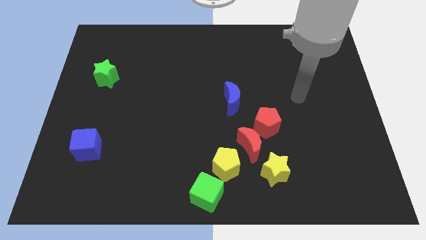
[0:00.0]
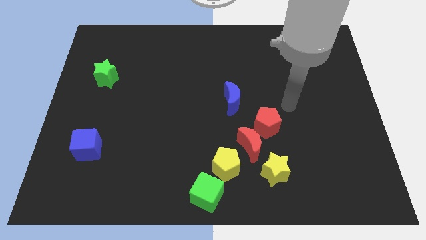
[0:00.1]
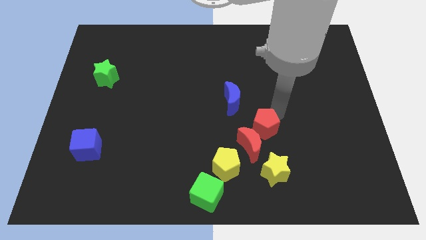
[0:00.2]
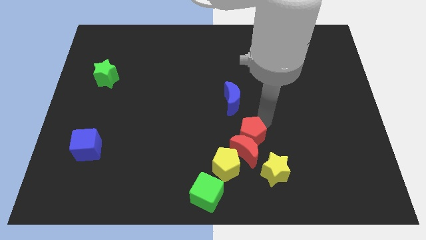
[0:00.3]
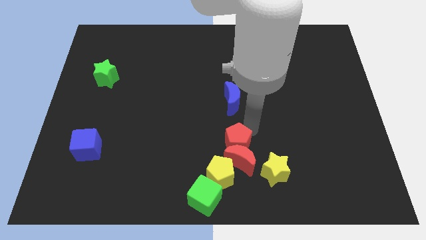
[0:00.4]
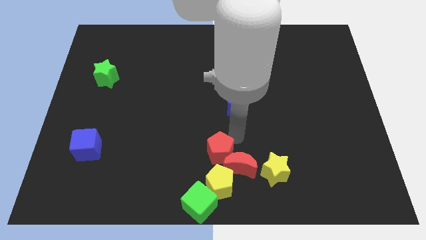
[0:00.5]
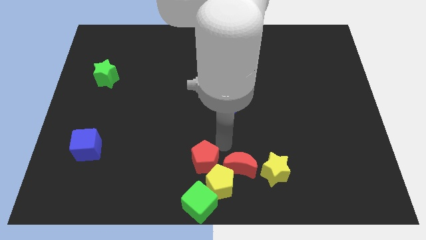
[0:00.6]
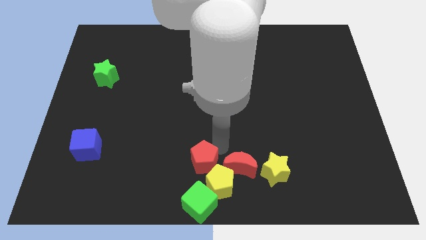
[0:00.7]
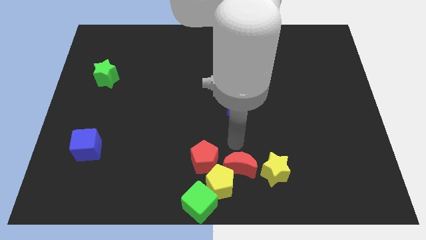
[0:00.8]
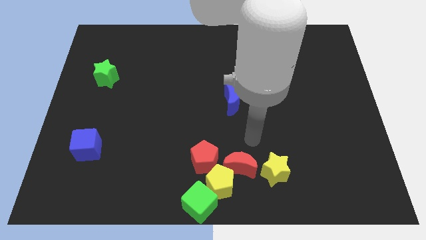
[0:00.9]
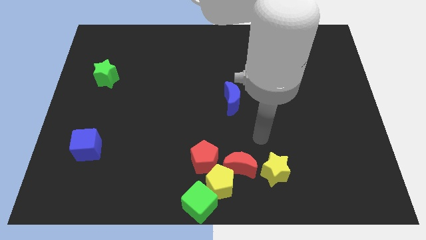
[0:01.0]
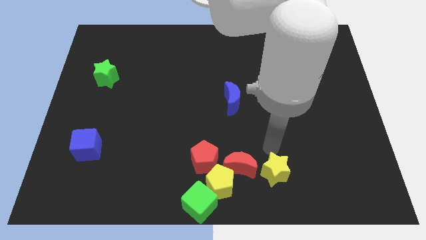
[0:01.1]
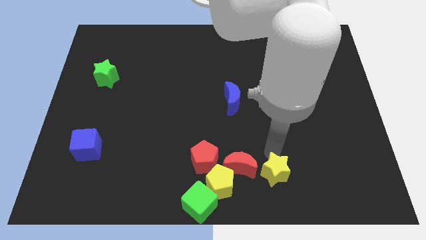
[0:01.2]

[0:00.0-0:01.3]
move the red pentagon to the left side of the red moon

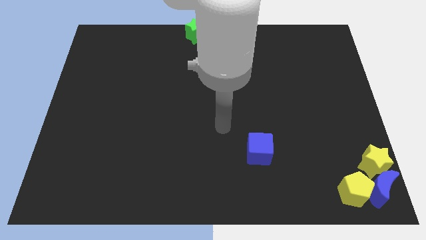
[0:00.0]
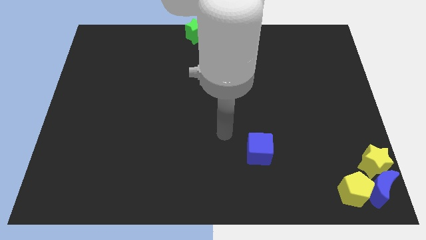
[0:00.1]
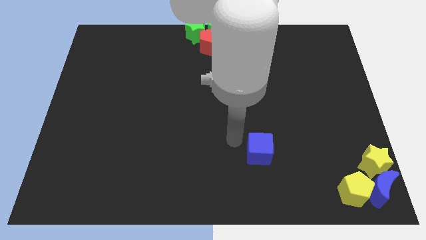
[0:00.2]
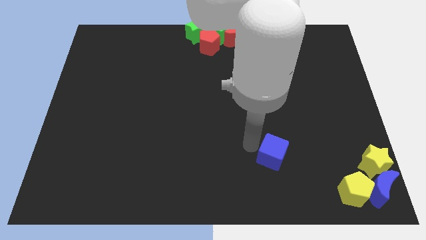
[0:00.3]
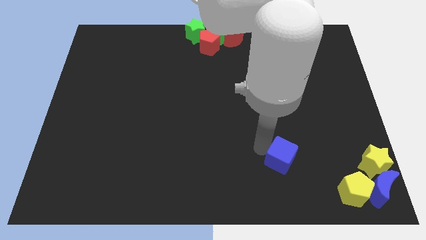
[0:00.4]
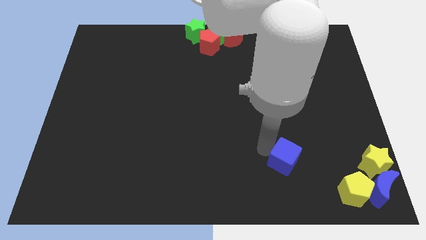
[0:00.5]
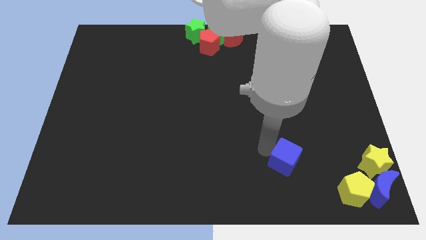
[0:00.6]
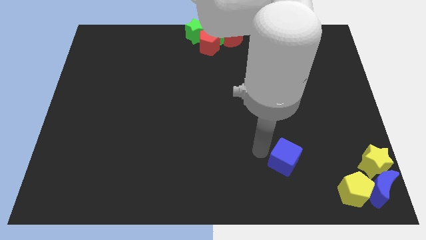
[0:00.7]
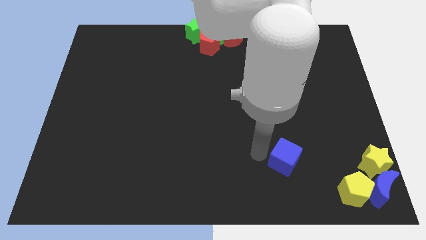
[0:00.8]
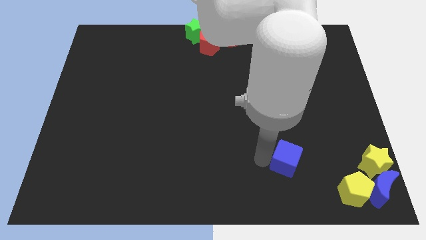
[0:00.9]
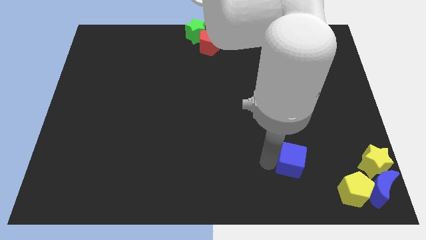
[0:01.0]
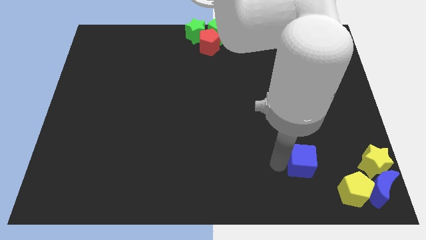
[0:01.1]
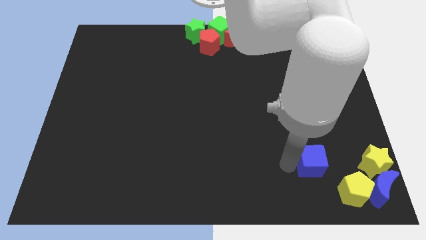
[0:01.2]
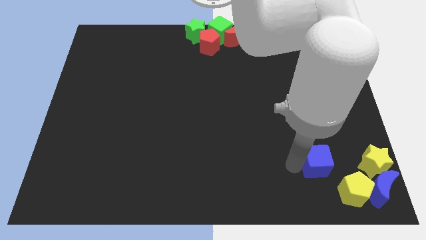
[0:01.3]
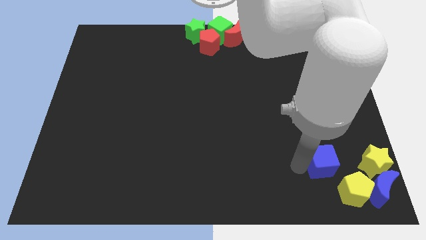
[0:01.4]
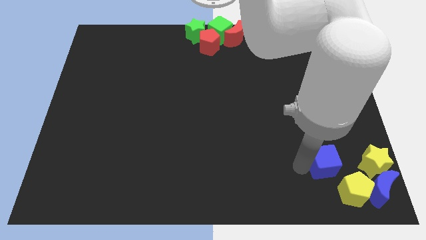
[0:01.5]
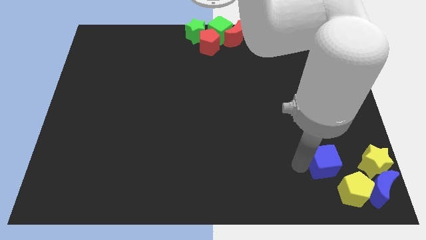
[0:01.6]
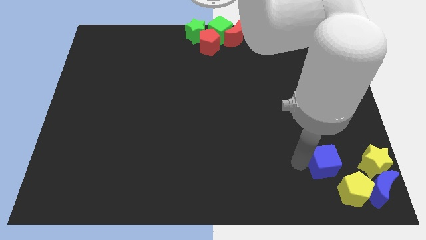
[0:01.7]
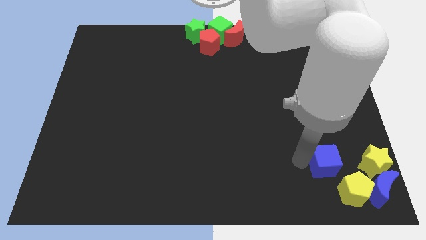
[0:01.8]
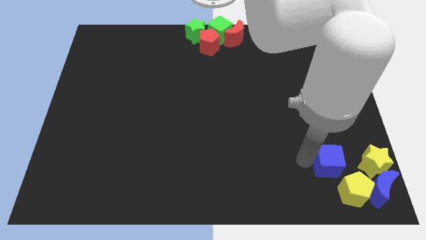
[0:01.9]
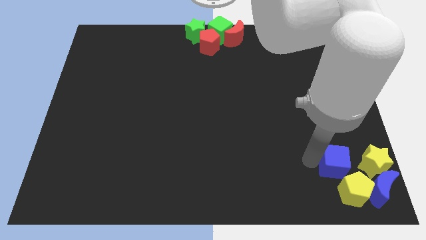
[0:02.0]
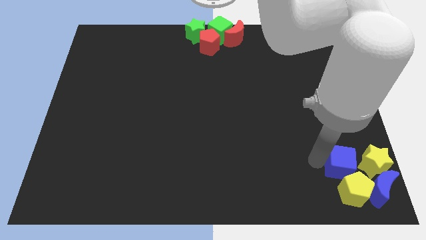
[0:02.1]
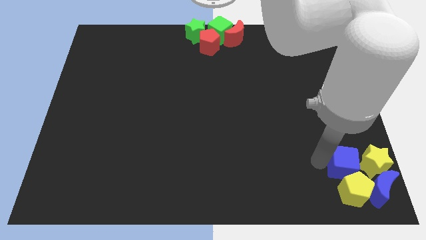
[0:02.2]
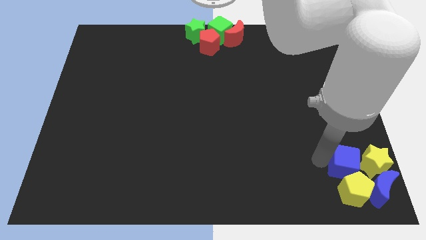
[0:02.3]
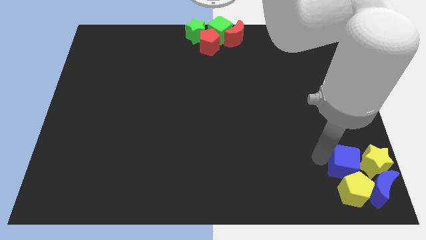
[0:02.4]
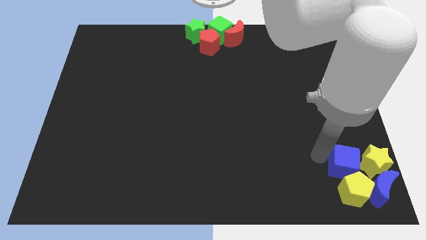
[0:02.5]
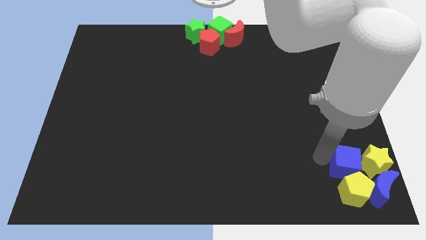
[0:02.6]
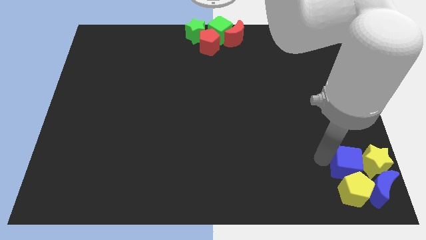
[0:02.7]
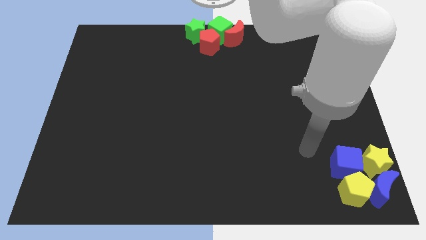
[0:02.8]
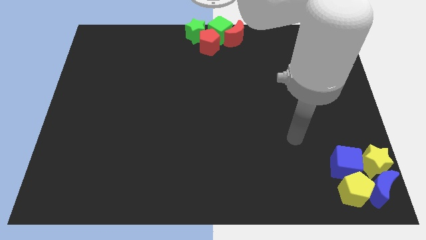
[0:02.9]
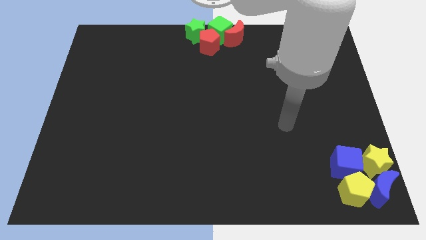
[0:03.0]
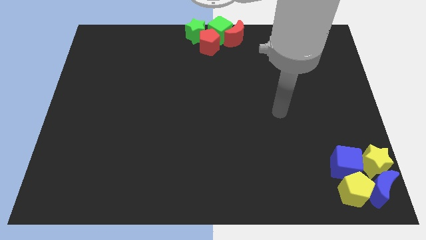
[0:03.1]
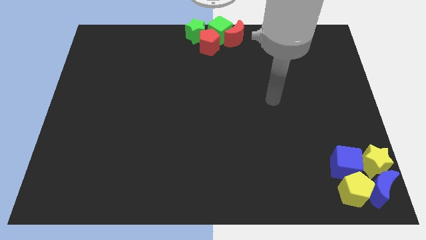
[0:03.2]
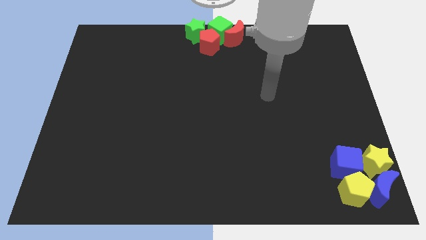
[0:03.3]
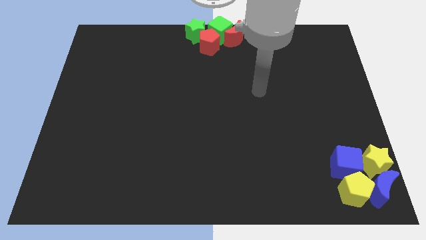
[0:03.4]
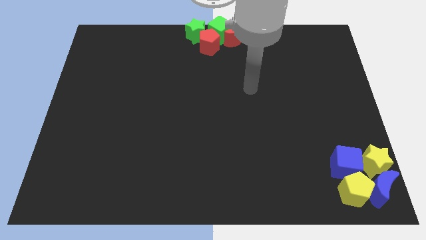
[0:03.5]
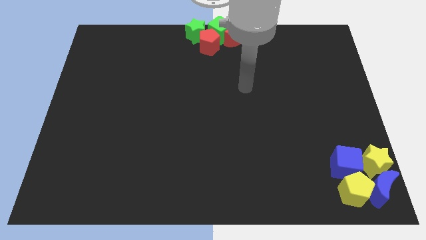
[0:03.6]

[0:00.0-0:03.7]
push the blue cube into the group of blocks

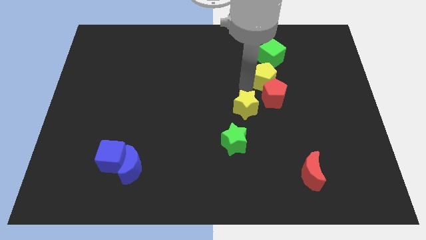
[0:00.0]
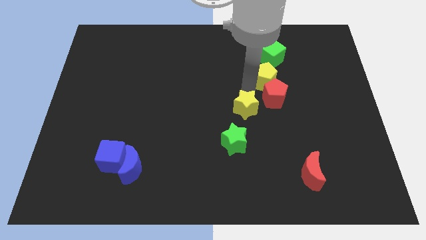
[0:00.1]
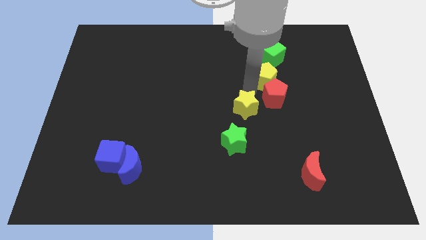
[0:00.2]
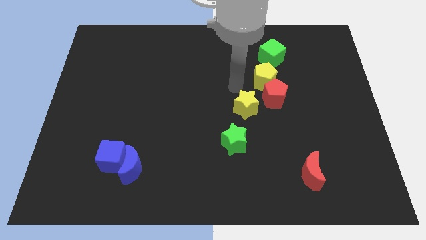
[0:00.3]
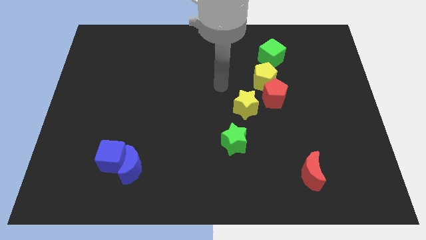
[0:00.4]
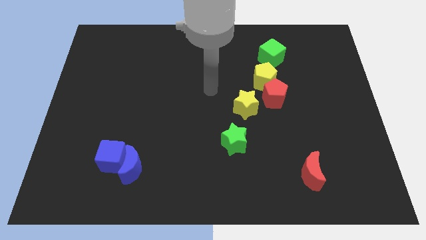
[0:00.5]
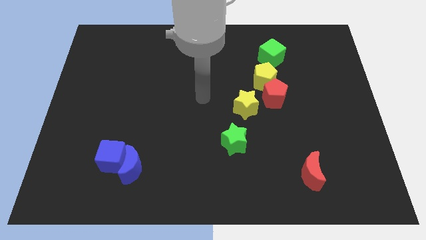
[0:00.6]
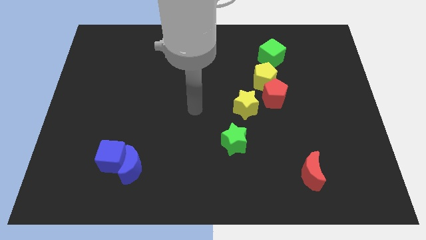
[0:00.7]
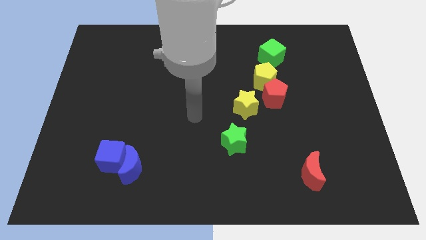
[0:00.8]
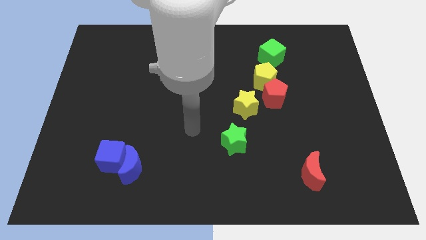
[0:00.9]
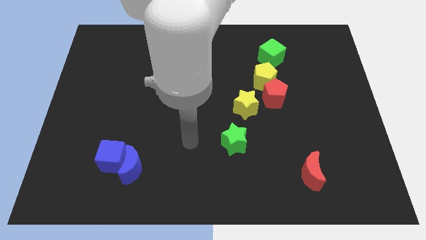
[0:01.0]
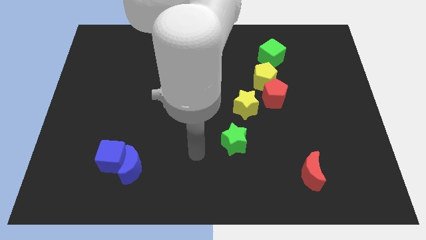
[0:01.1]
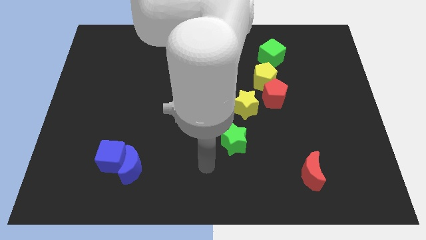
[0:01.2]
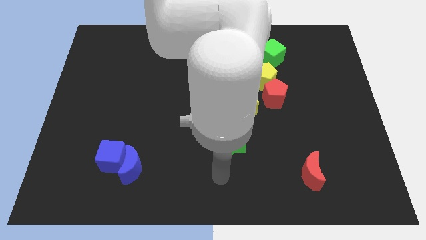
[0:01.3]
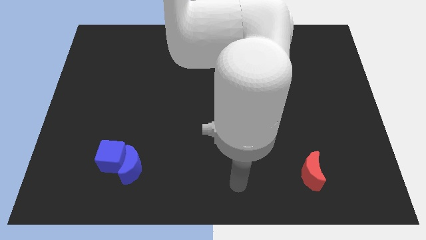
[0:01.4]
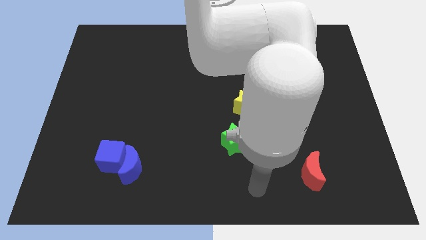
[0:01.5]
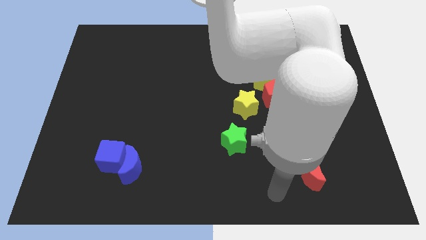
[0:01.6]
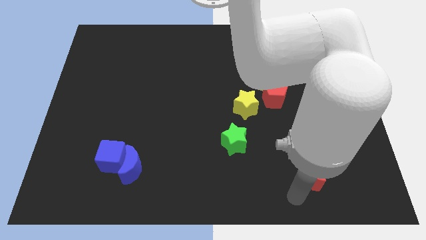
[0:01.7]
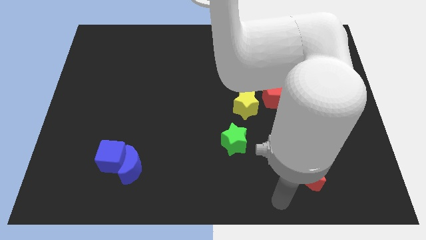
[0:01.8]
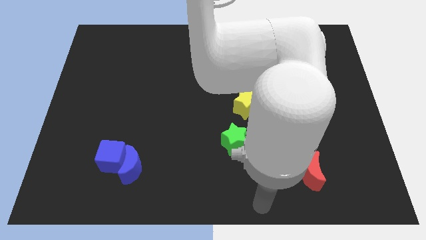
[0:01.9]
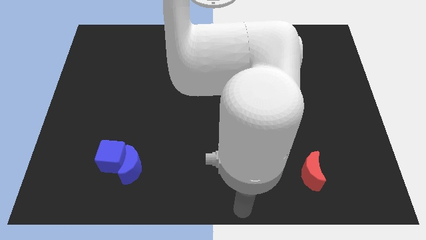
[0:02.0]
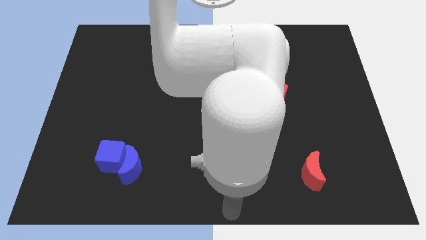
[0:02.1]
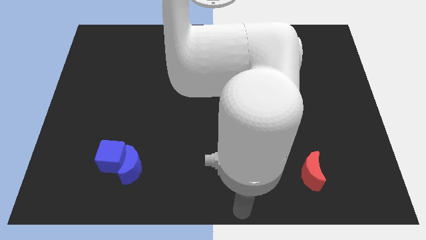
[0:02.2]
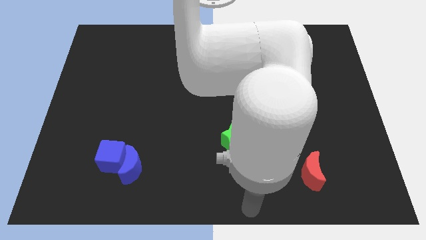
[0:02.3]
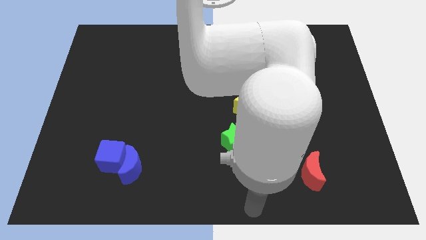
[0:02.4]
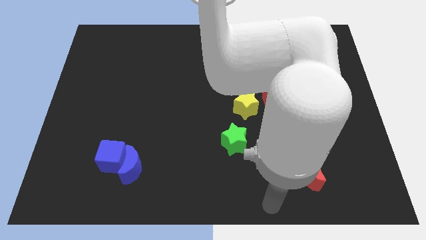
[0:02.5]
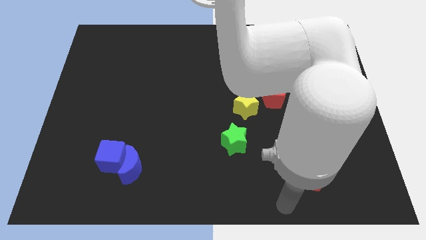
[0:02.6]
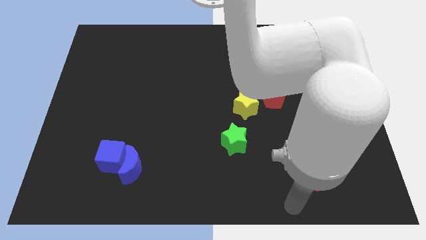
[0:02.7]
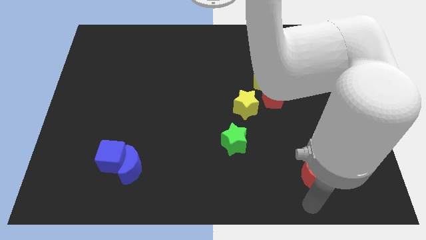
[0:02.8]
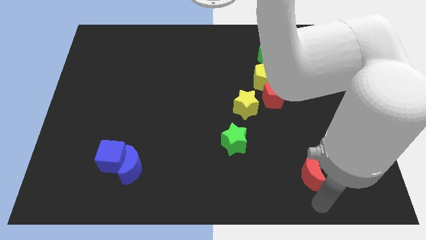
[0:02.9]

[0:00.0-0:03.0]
place your arm below red crescent

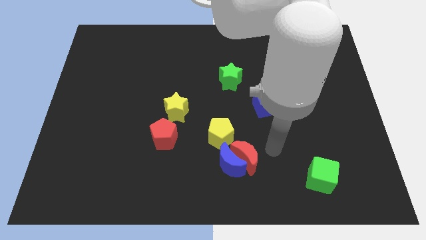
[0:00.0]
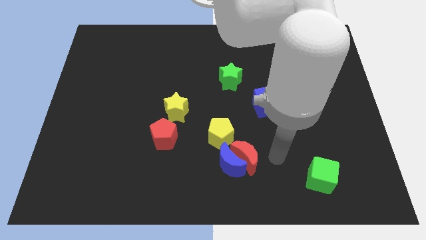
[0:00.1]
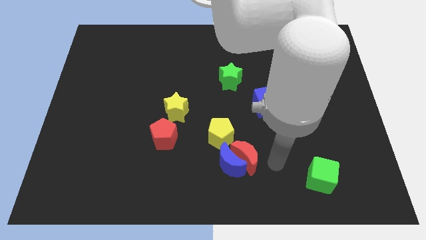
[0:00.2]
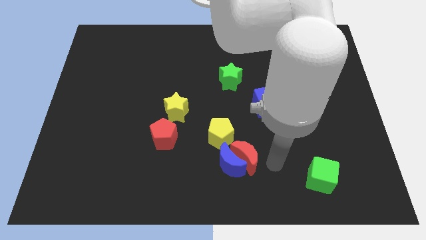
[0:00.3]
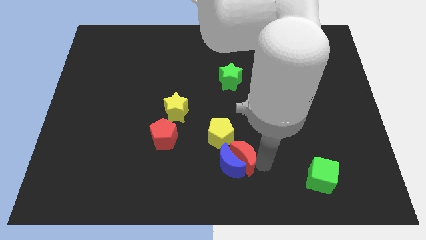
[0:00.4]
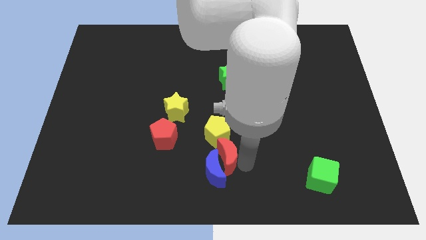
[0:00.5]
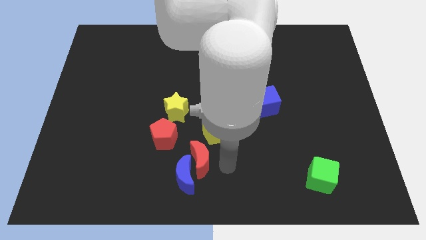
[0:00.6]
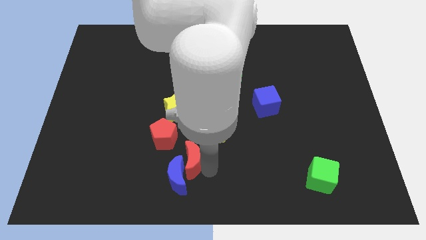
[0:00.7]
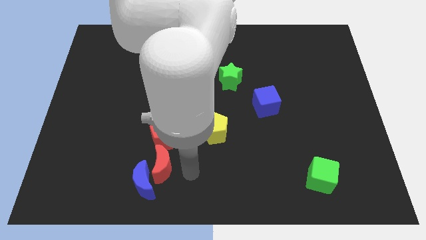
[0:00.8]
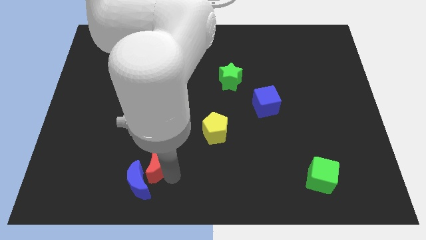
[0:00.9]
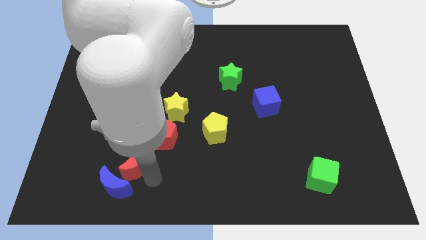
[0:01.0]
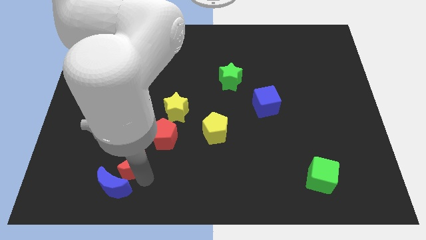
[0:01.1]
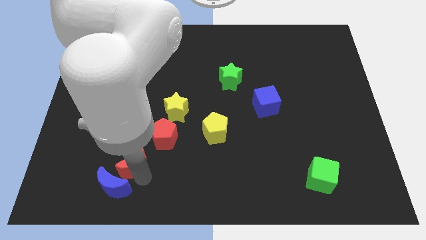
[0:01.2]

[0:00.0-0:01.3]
move the red and blue crescents diagonally on the bottom left side of the red pentagon
